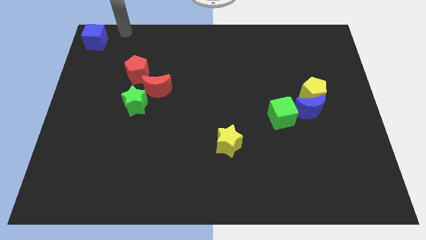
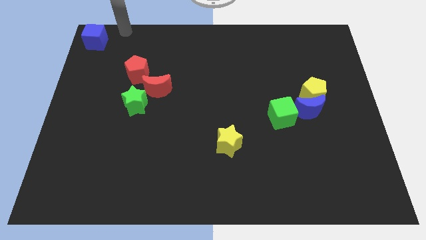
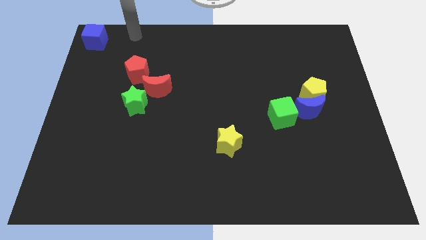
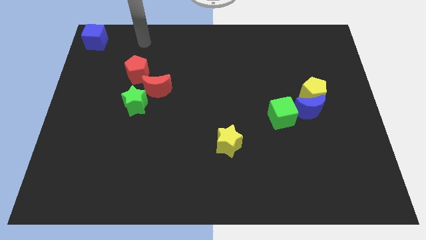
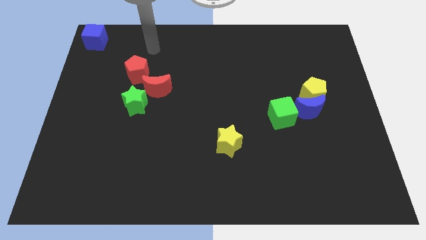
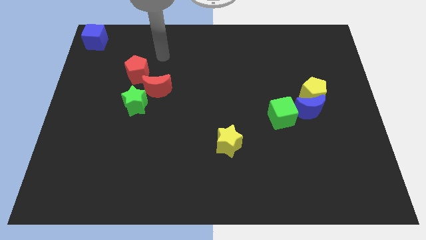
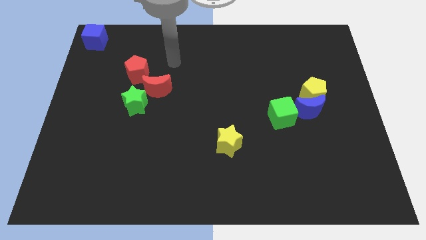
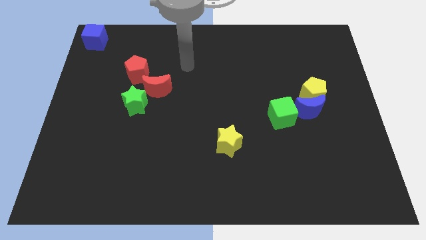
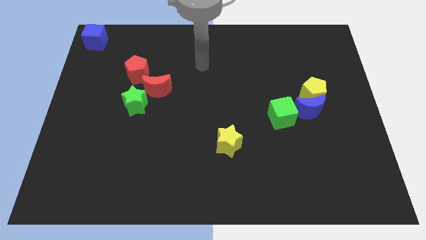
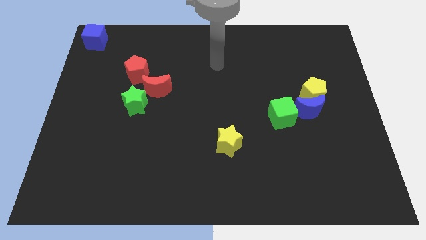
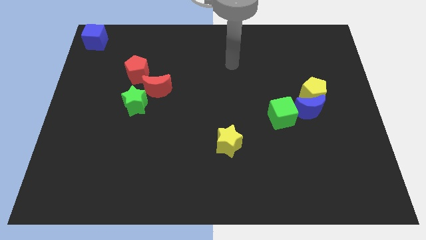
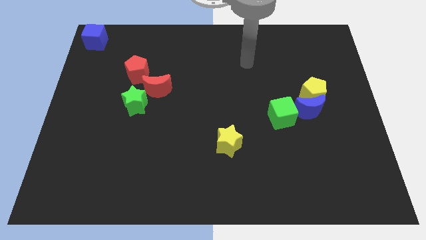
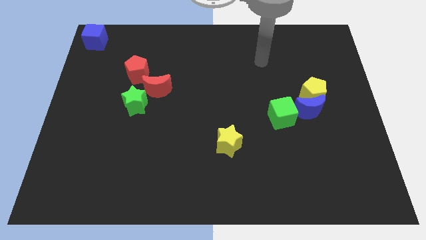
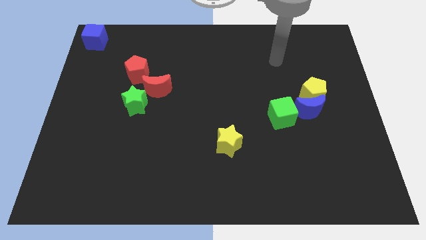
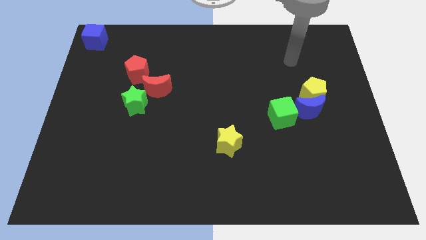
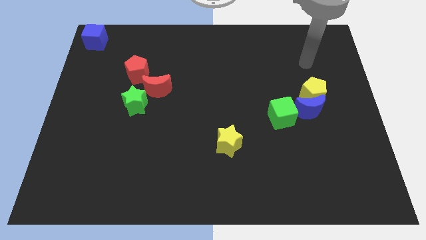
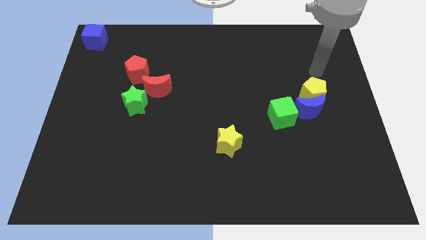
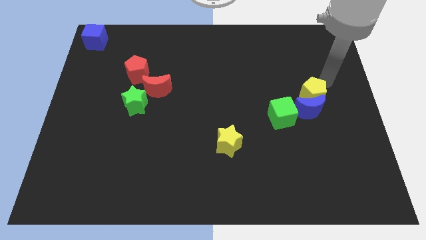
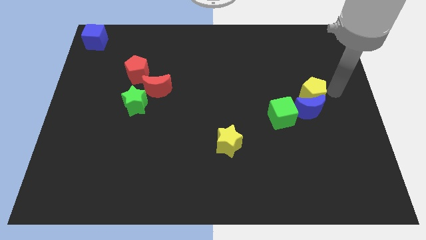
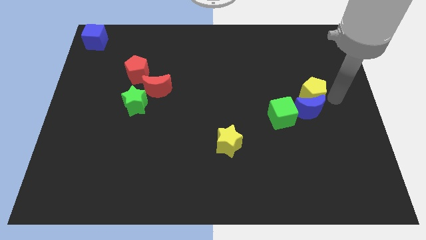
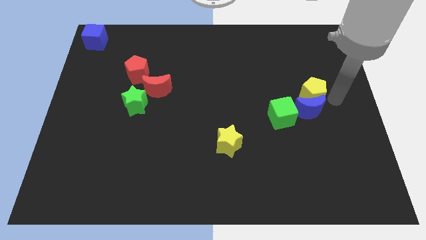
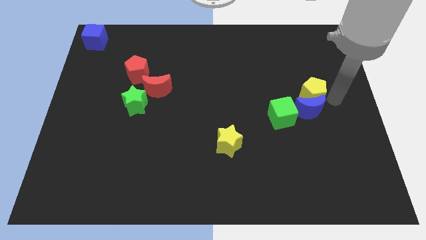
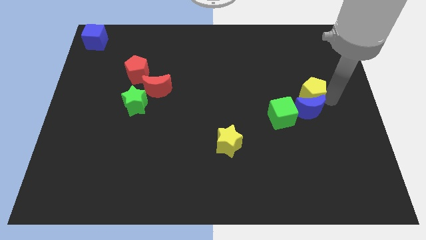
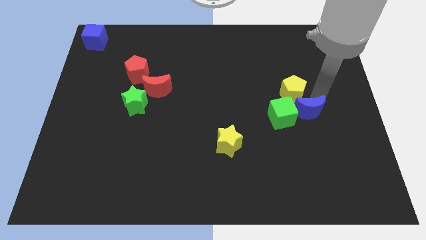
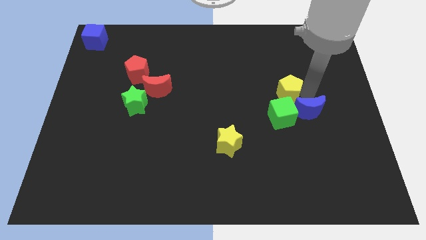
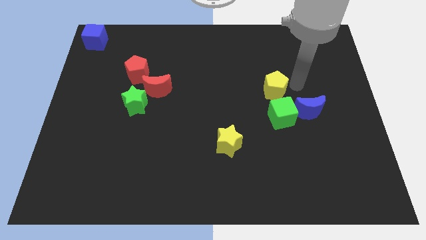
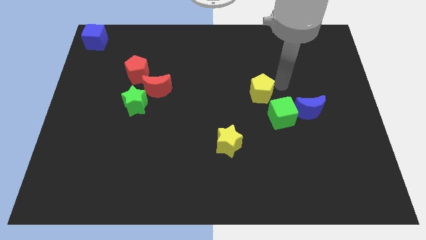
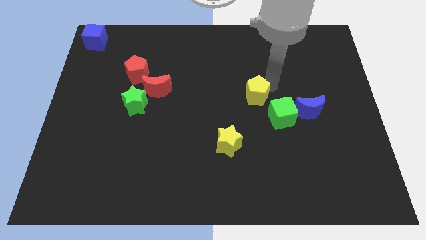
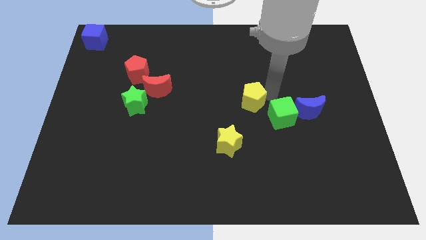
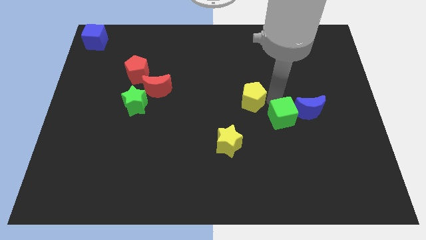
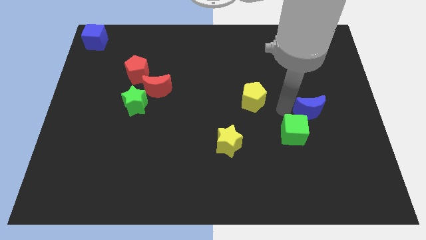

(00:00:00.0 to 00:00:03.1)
push the yellow pentagon to the top left of the green cube

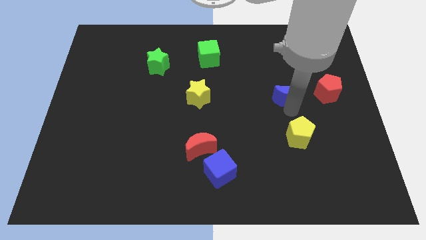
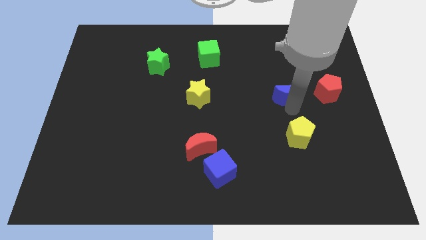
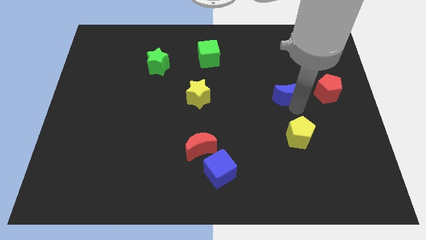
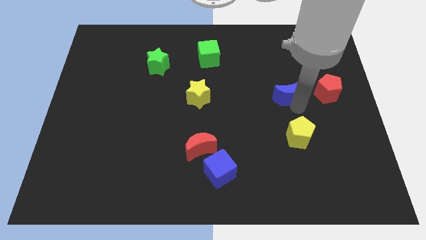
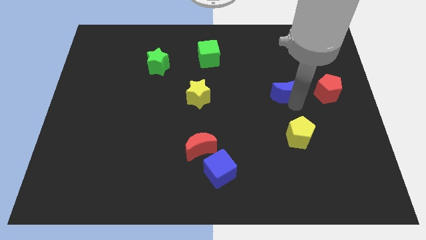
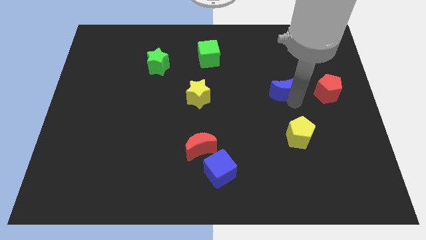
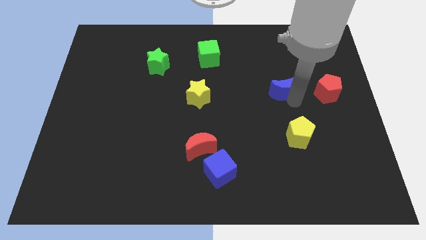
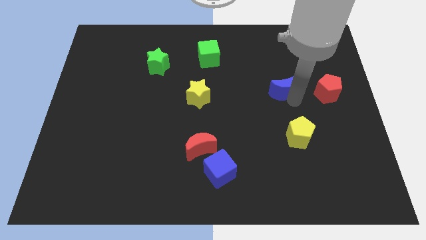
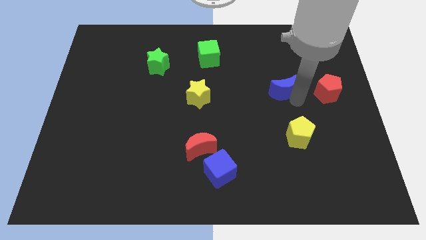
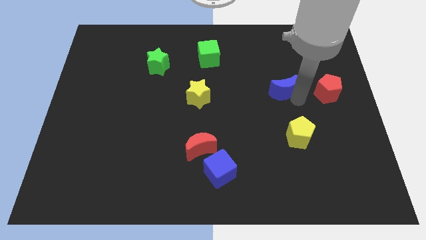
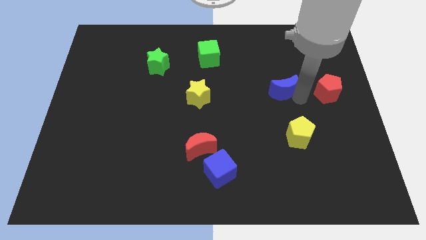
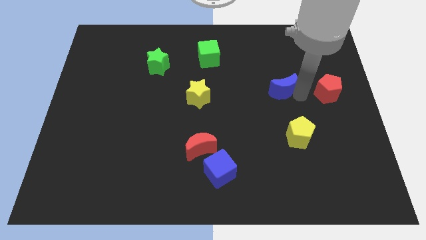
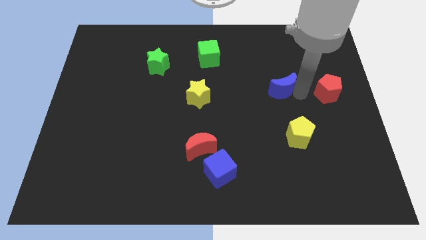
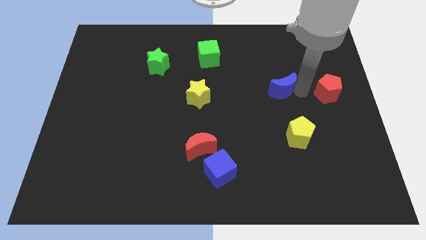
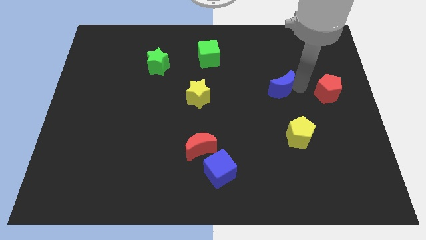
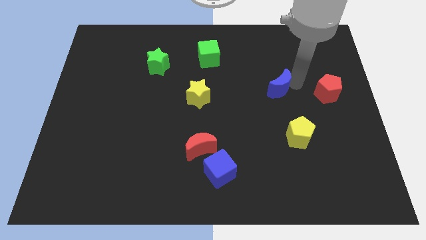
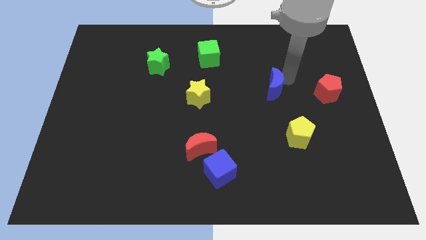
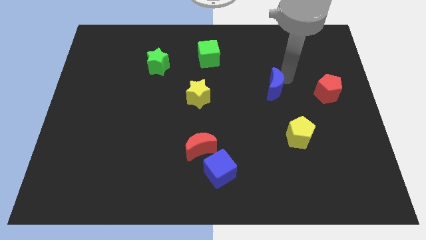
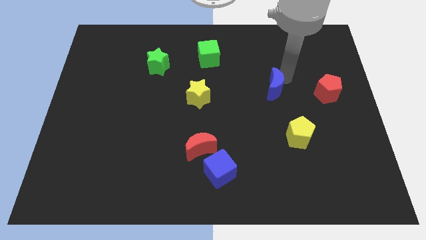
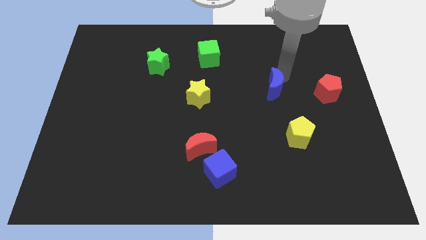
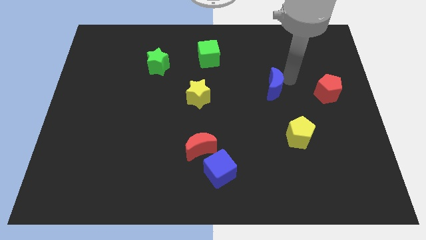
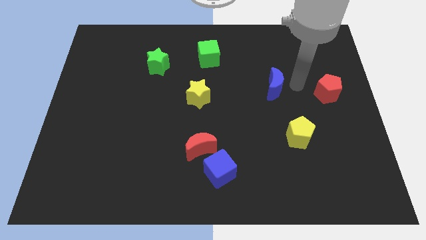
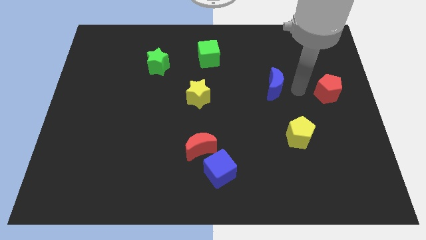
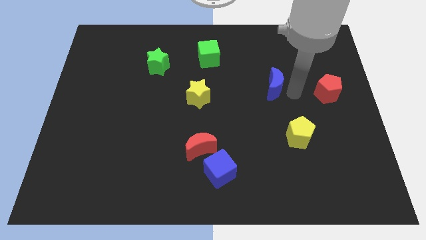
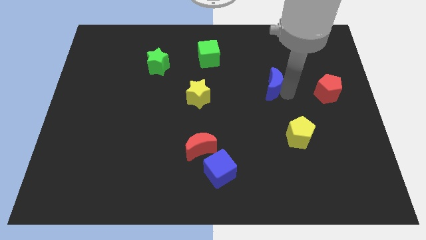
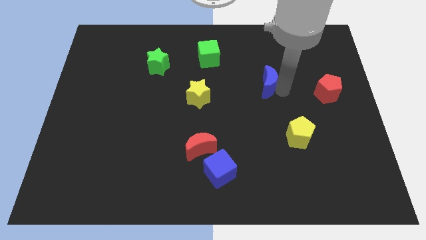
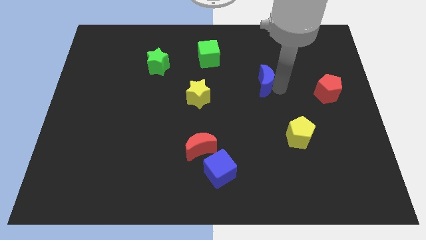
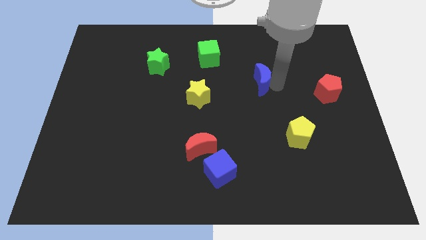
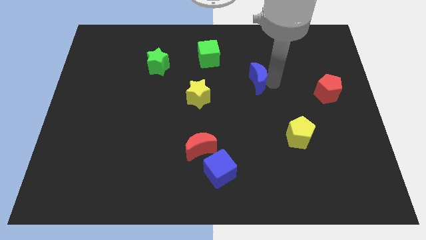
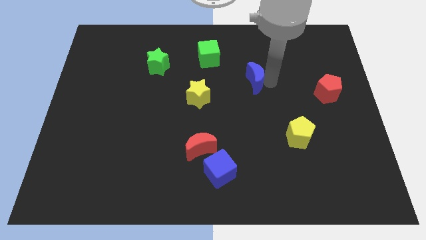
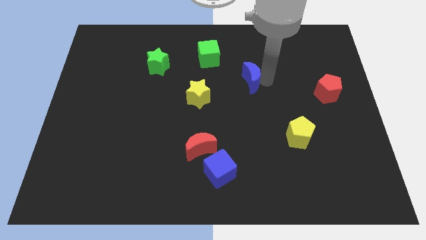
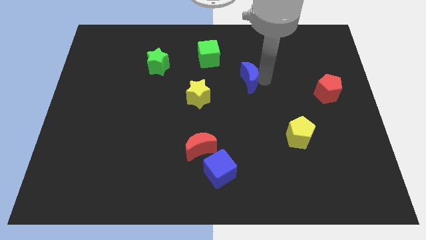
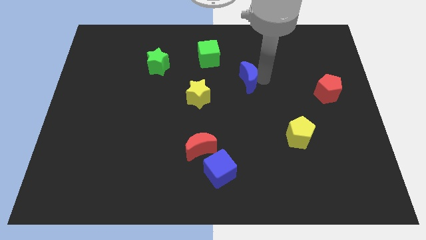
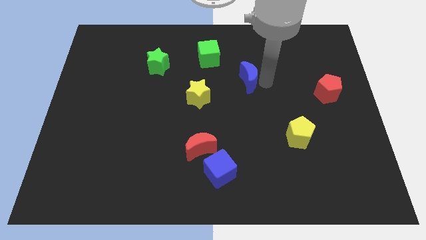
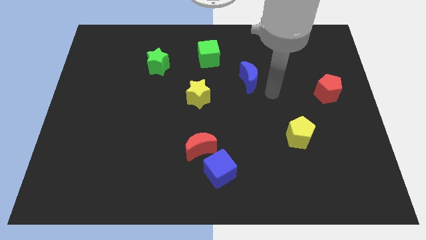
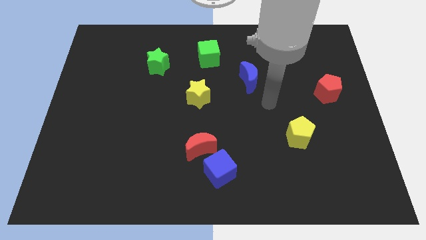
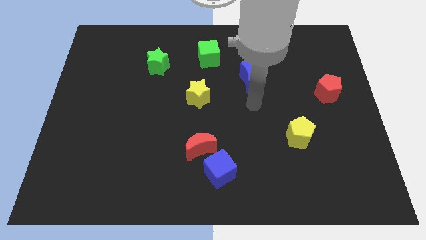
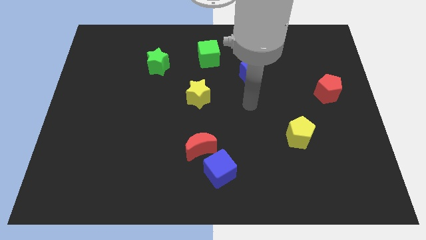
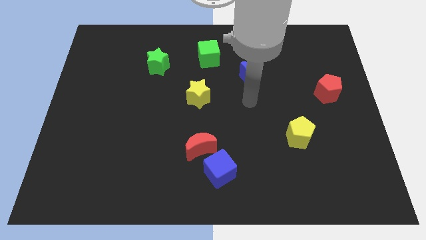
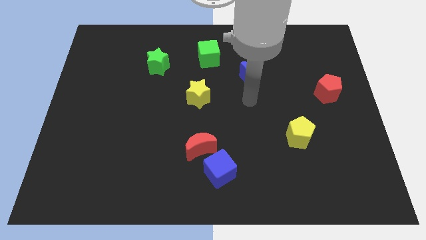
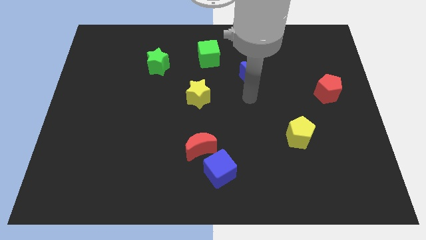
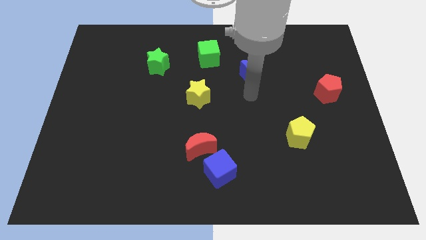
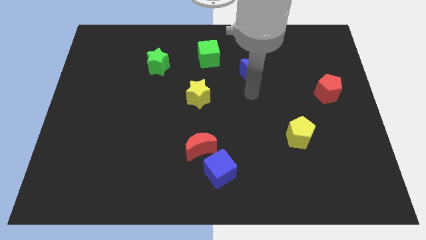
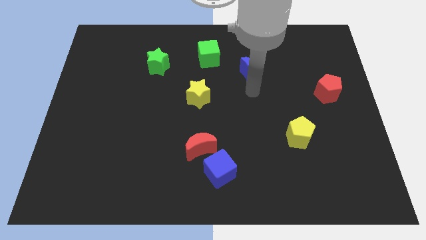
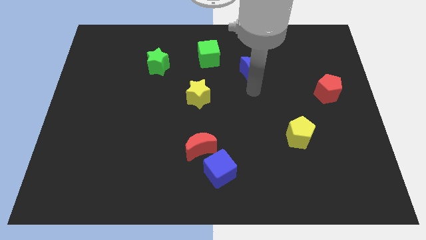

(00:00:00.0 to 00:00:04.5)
move the blue crescent to the top right of the yellow star

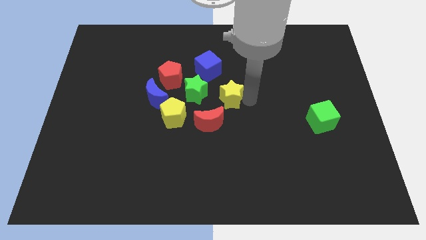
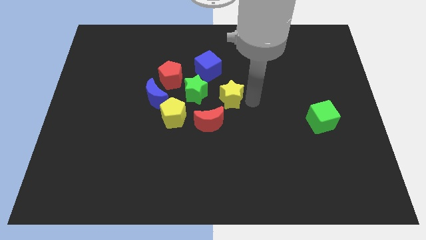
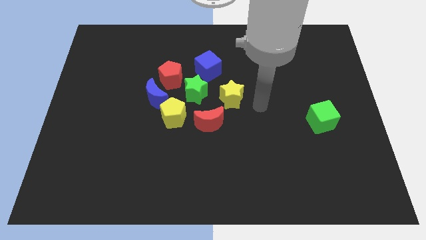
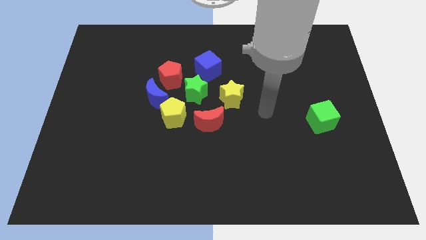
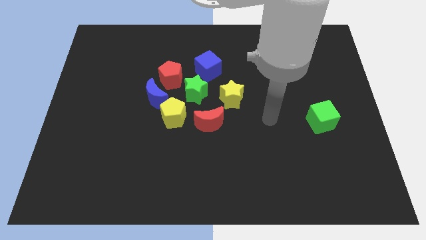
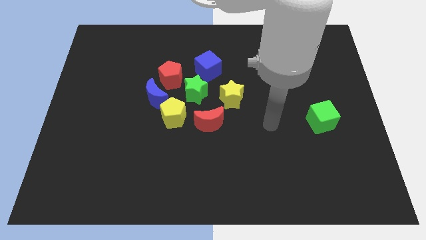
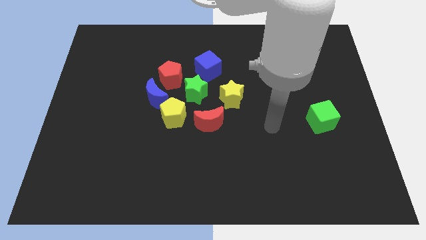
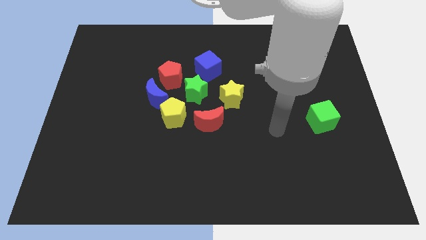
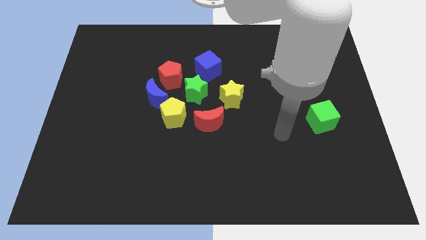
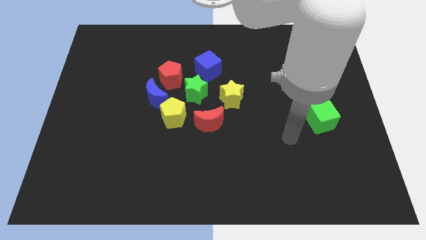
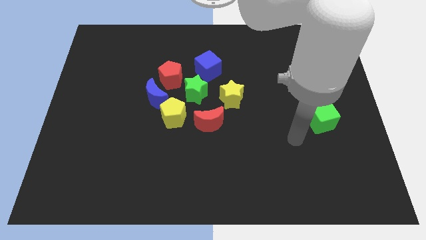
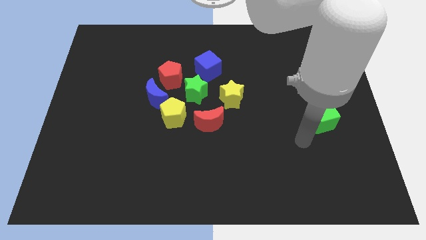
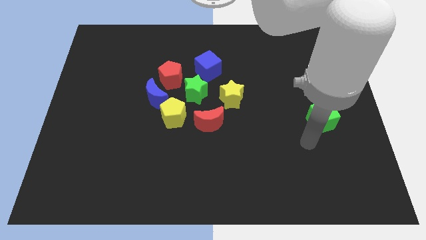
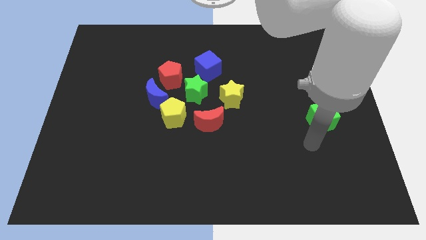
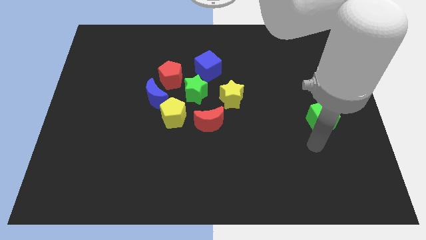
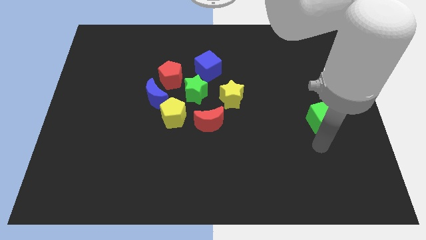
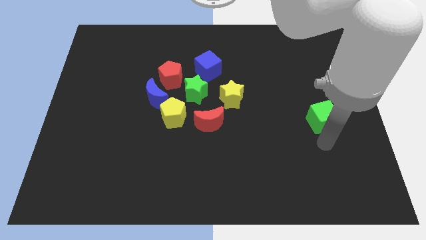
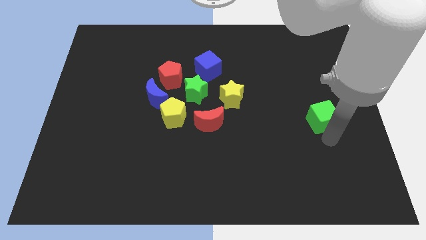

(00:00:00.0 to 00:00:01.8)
place the arm below the green cube
